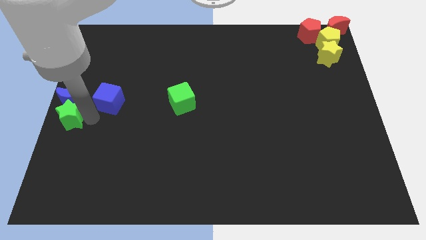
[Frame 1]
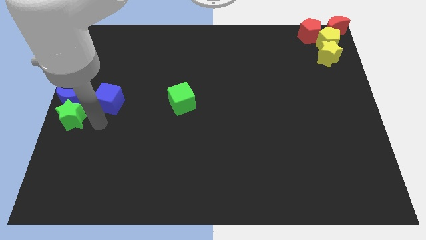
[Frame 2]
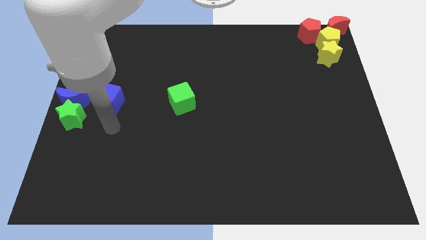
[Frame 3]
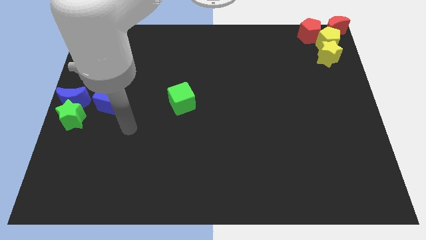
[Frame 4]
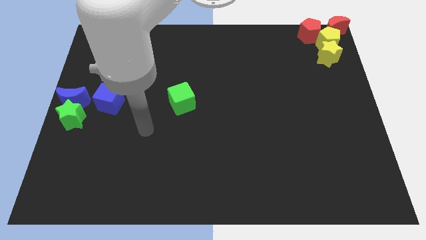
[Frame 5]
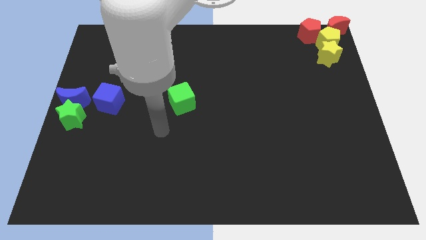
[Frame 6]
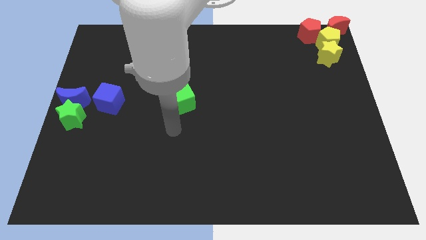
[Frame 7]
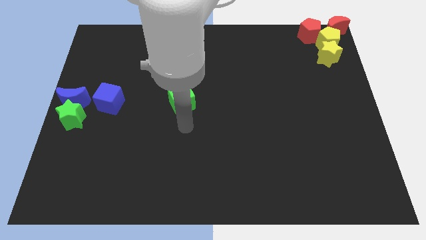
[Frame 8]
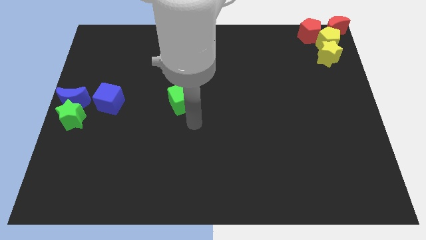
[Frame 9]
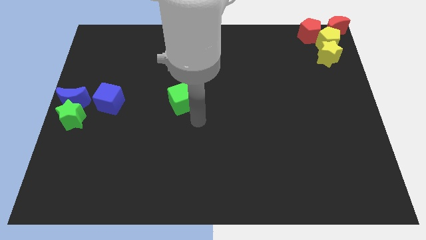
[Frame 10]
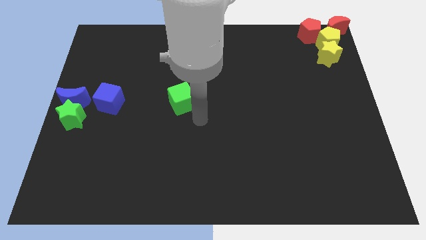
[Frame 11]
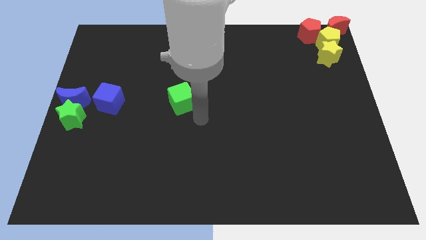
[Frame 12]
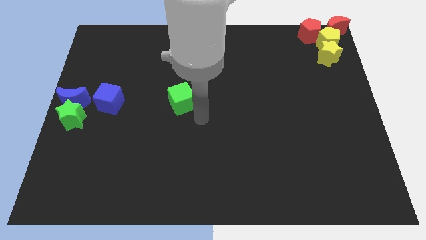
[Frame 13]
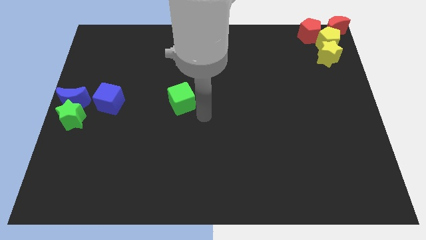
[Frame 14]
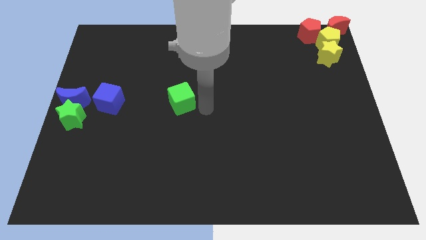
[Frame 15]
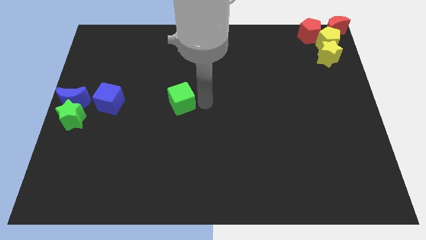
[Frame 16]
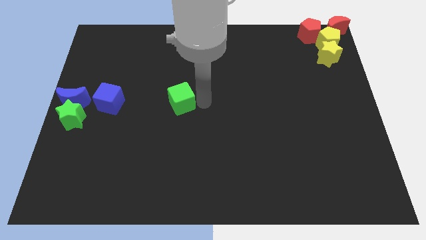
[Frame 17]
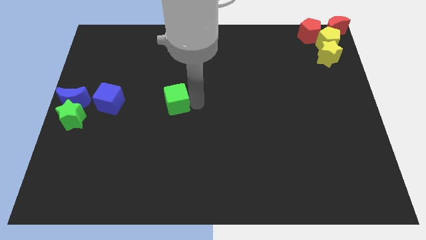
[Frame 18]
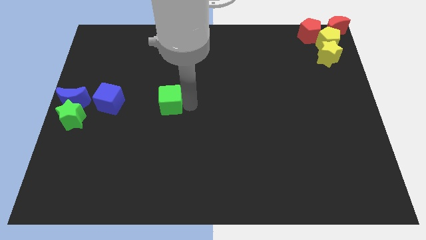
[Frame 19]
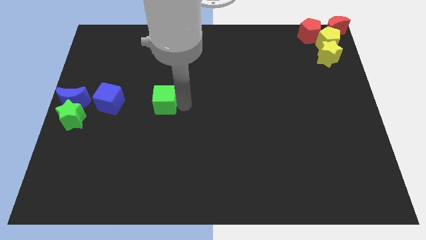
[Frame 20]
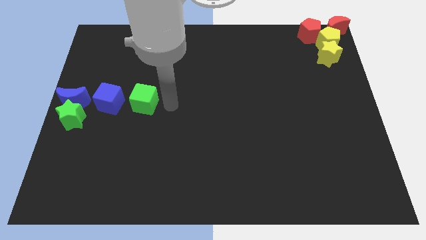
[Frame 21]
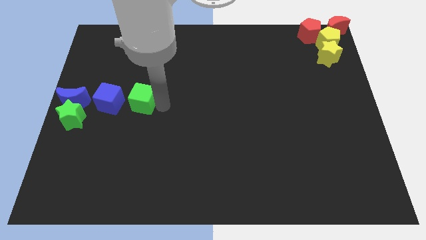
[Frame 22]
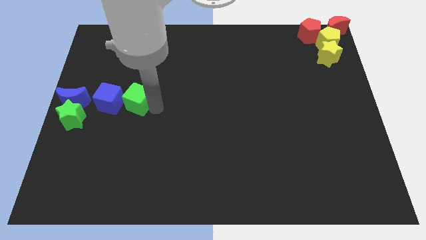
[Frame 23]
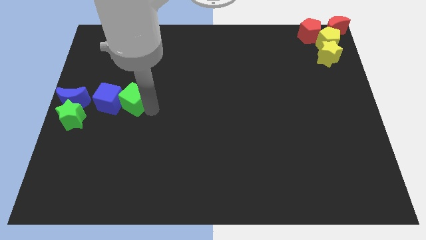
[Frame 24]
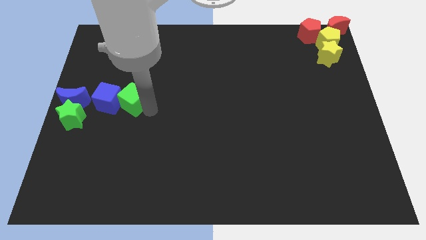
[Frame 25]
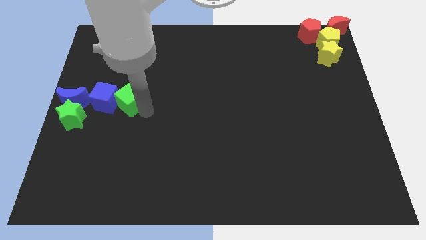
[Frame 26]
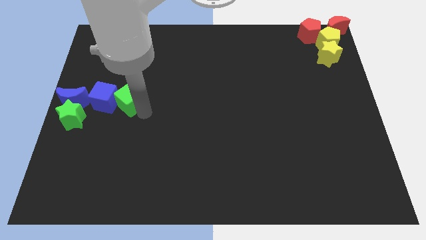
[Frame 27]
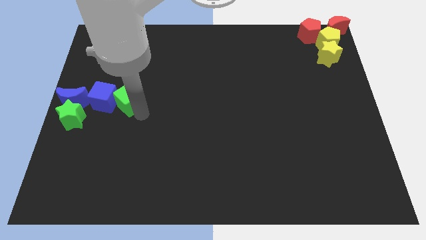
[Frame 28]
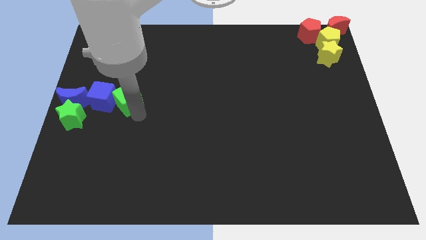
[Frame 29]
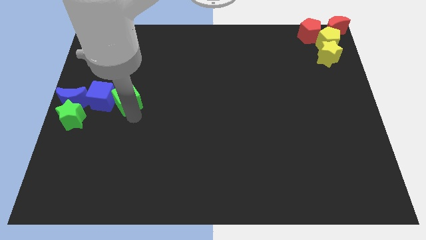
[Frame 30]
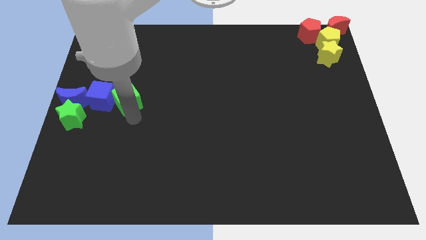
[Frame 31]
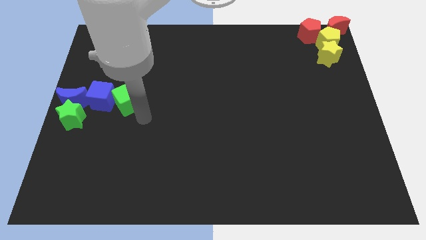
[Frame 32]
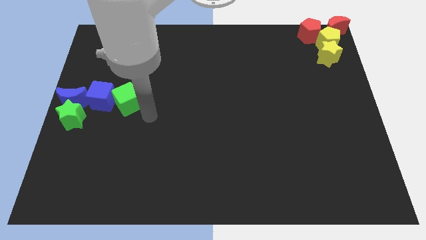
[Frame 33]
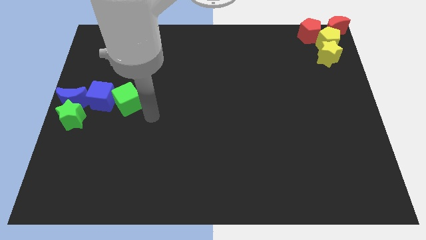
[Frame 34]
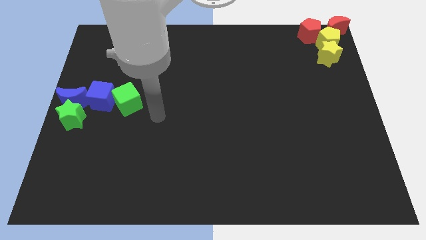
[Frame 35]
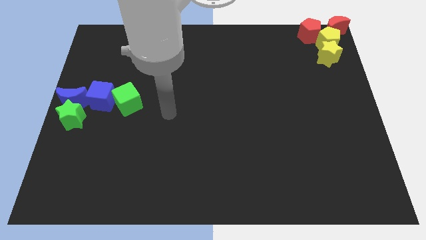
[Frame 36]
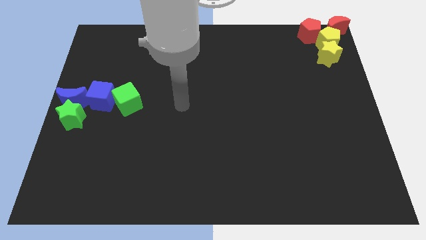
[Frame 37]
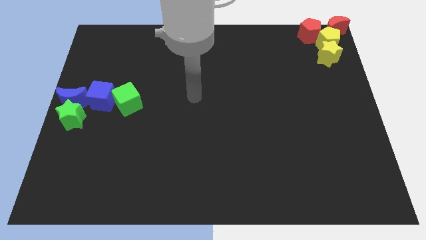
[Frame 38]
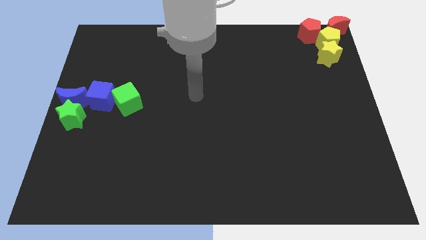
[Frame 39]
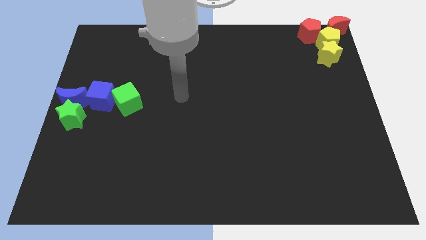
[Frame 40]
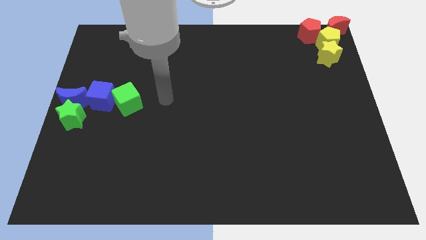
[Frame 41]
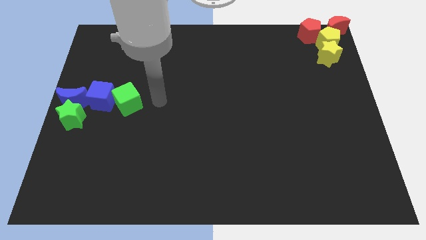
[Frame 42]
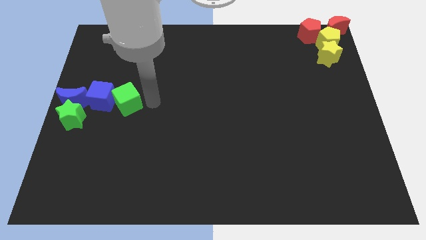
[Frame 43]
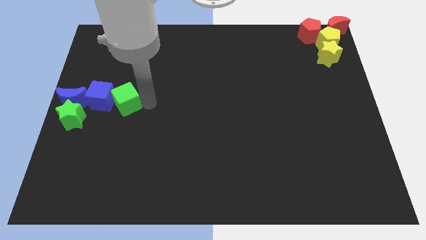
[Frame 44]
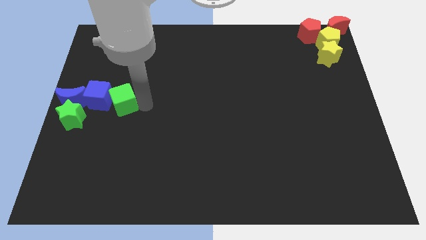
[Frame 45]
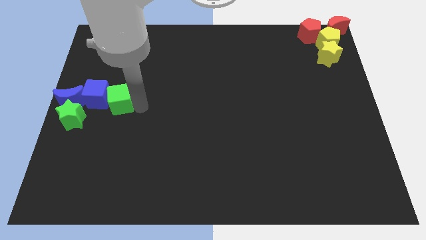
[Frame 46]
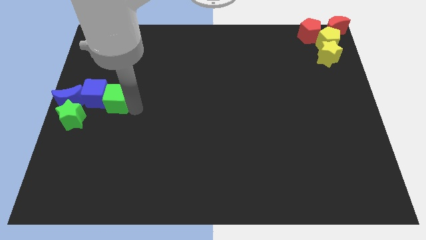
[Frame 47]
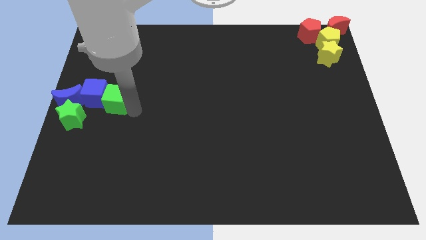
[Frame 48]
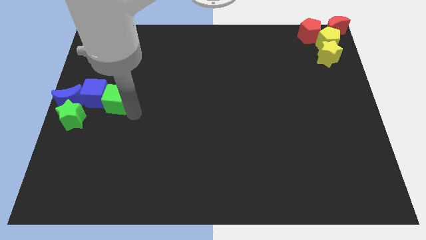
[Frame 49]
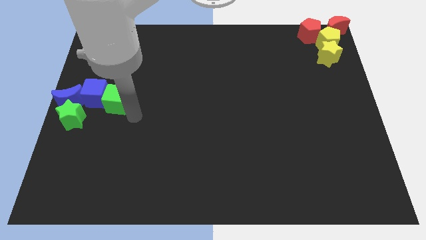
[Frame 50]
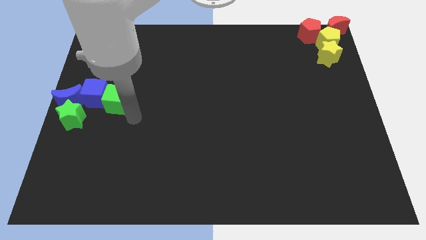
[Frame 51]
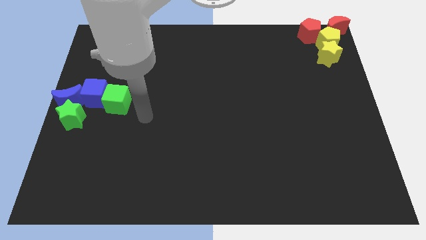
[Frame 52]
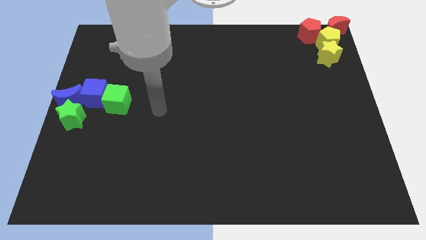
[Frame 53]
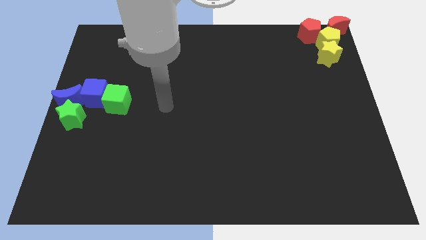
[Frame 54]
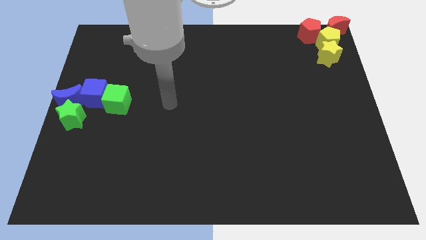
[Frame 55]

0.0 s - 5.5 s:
slightly push the green cube into the blue cube and blue crescent

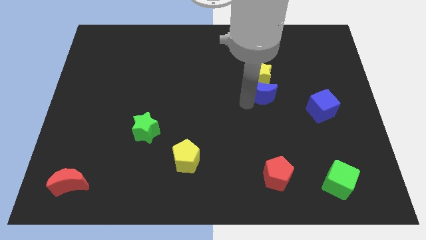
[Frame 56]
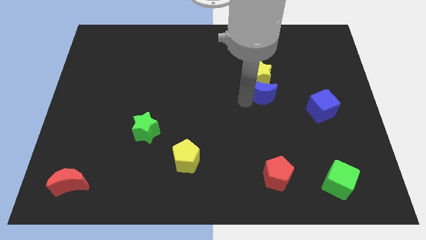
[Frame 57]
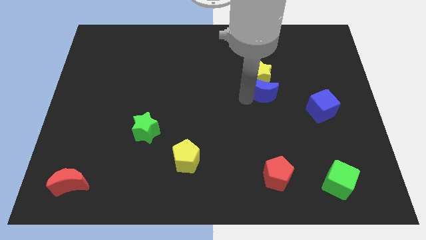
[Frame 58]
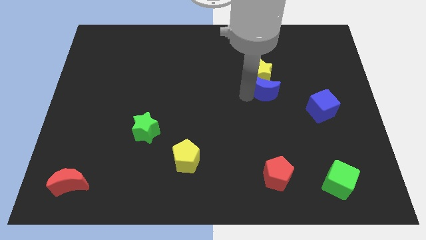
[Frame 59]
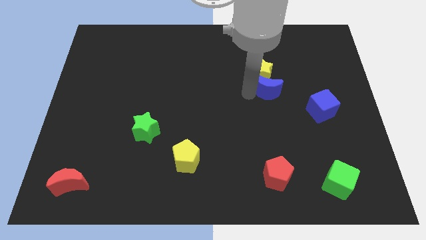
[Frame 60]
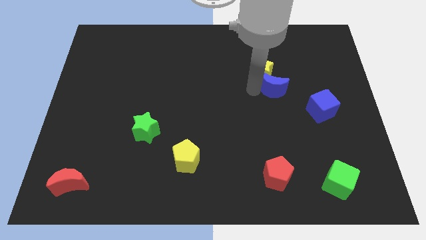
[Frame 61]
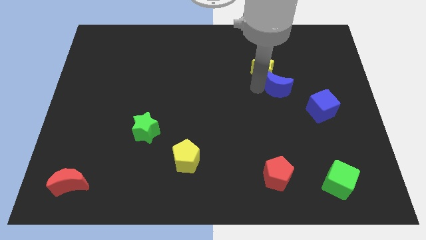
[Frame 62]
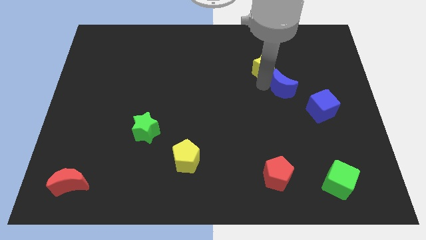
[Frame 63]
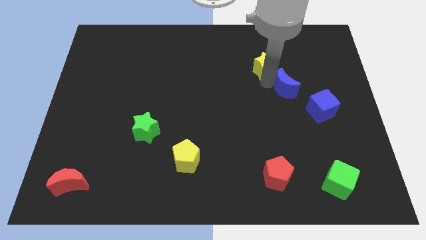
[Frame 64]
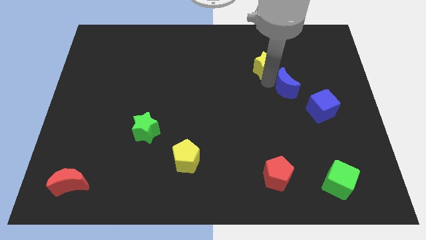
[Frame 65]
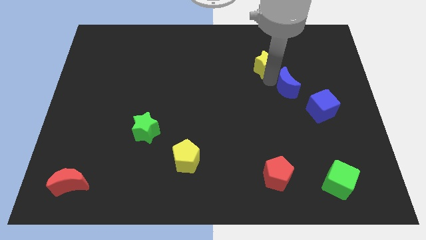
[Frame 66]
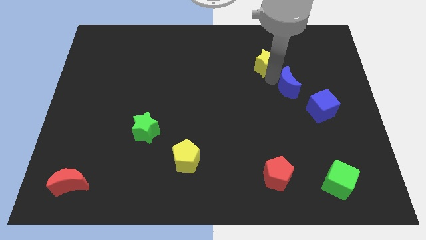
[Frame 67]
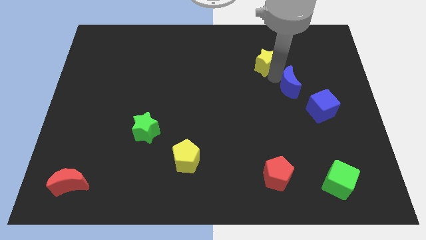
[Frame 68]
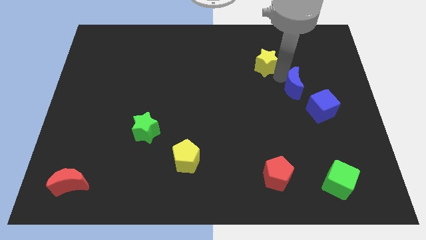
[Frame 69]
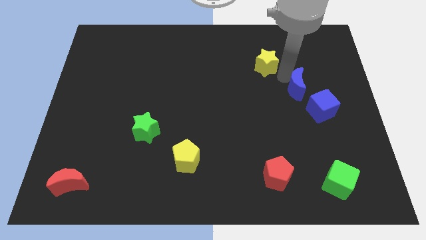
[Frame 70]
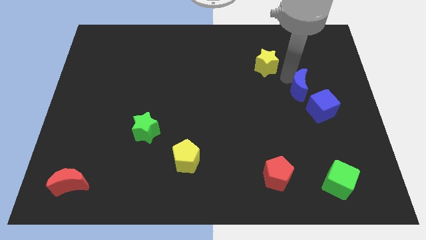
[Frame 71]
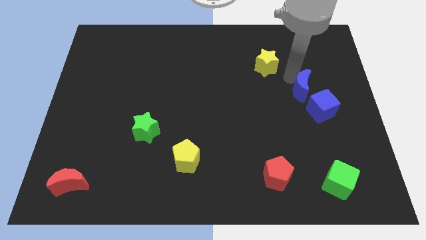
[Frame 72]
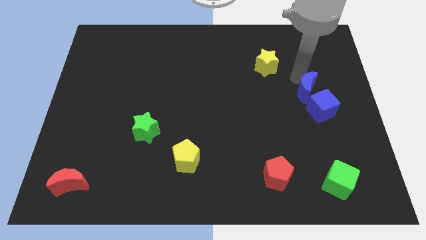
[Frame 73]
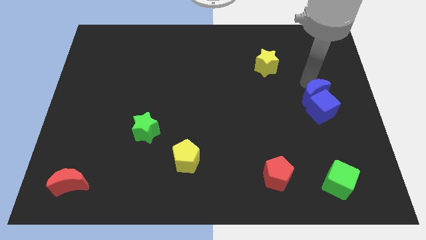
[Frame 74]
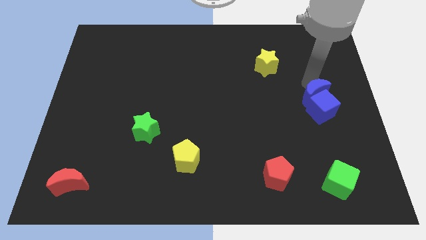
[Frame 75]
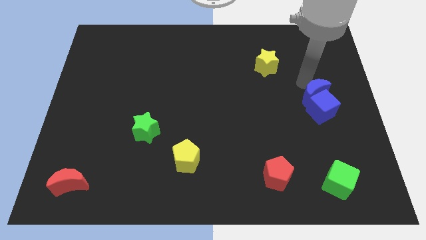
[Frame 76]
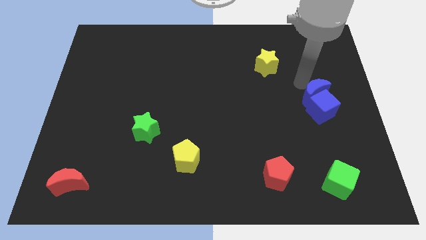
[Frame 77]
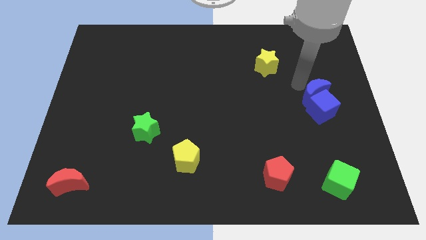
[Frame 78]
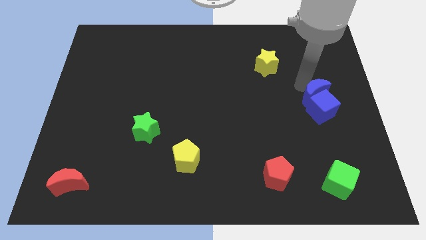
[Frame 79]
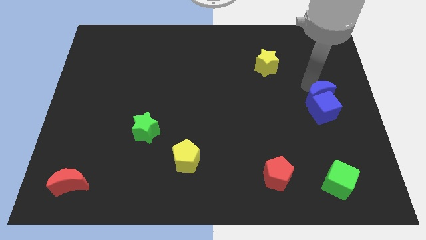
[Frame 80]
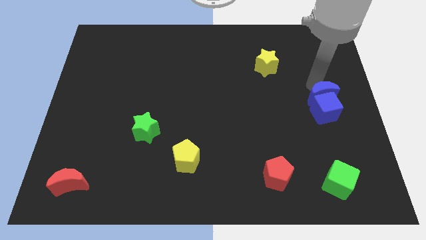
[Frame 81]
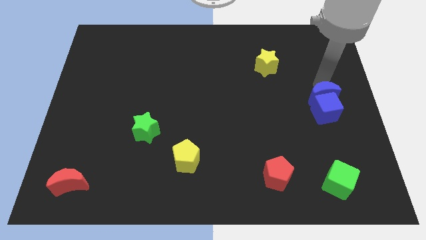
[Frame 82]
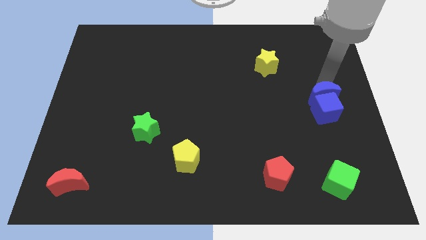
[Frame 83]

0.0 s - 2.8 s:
move the blue crescent to the top of the blue cube

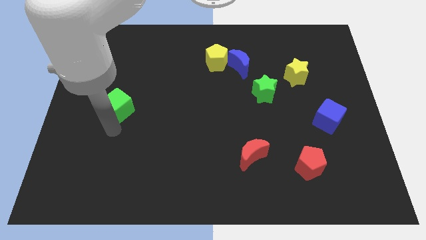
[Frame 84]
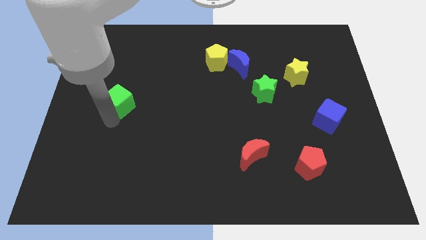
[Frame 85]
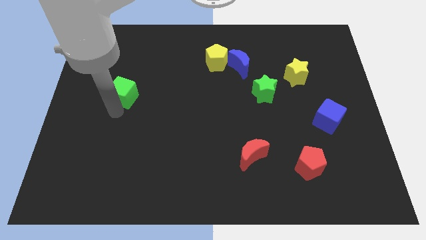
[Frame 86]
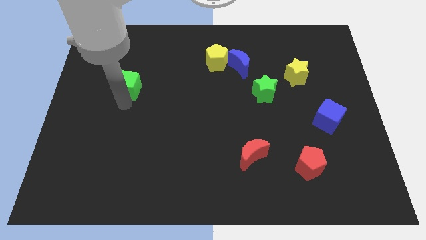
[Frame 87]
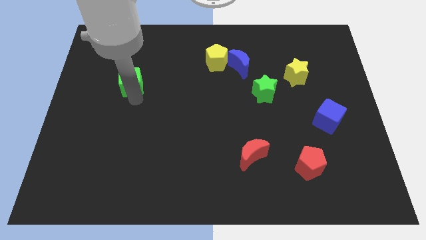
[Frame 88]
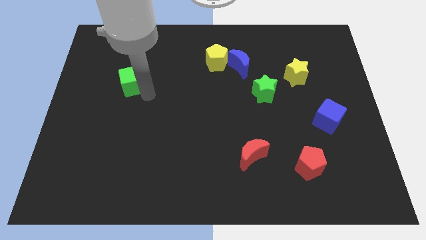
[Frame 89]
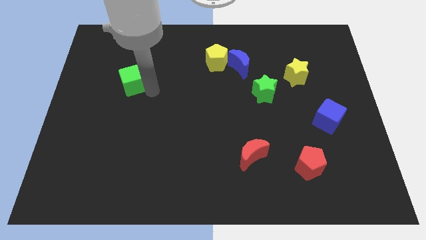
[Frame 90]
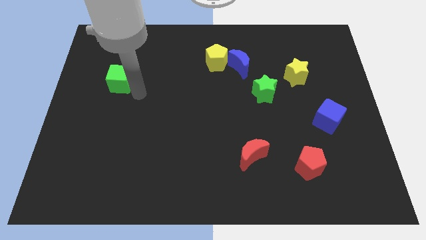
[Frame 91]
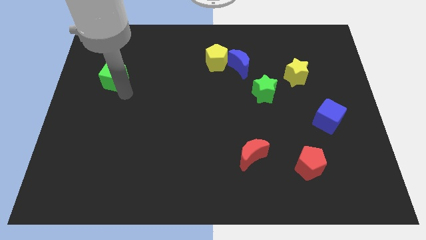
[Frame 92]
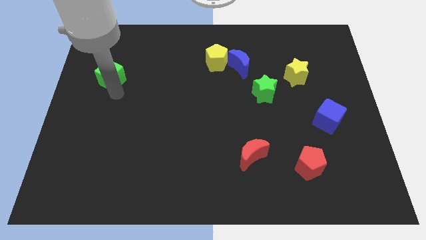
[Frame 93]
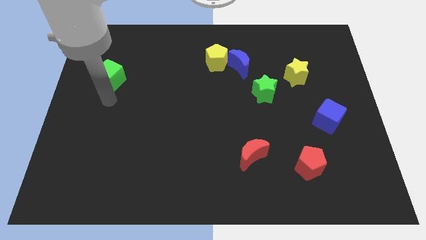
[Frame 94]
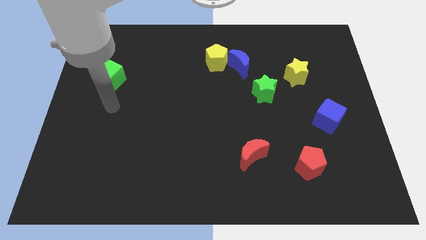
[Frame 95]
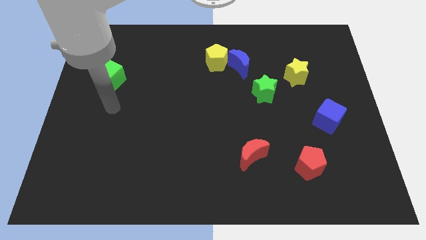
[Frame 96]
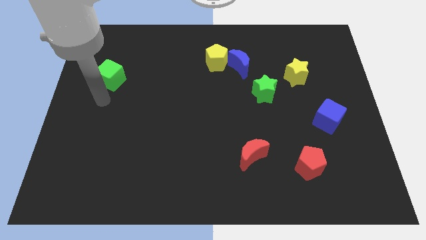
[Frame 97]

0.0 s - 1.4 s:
move the green cube parallel to the left of the yellow pentagon
